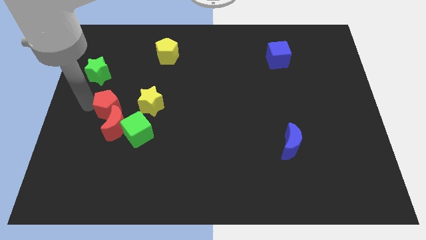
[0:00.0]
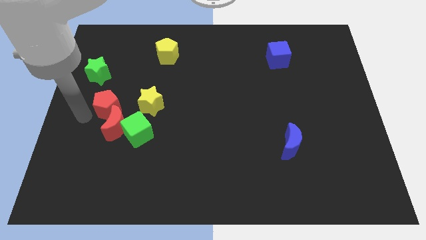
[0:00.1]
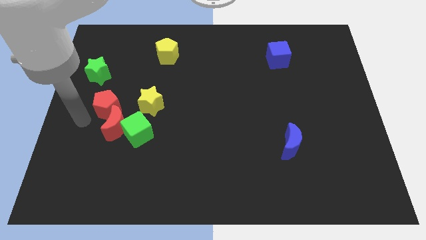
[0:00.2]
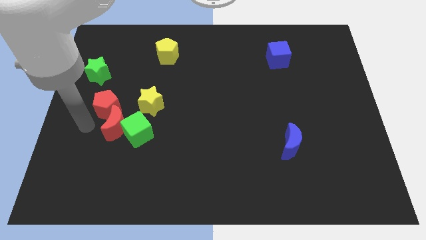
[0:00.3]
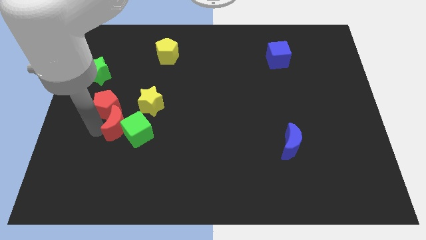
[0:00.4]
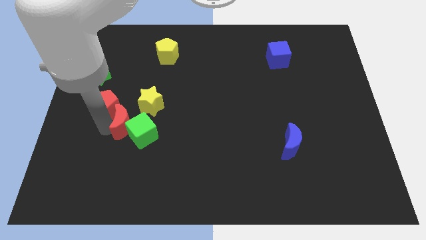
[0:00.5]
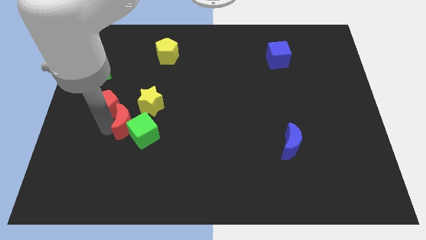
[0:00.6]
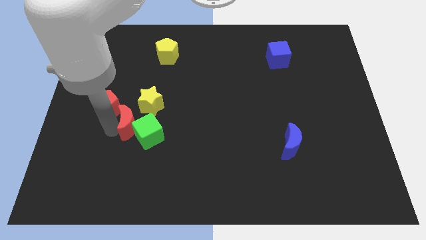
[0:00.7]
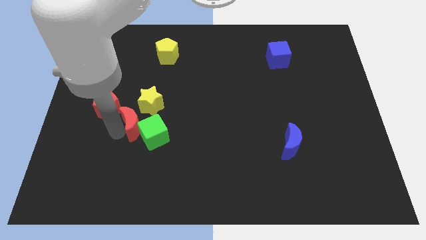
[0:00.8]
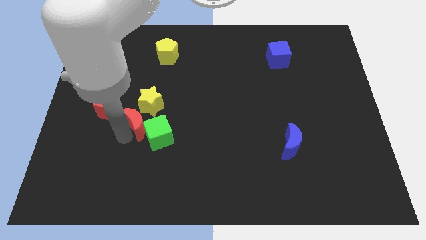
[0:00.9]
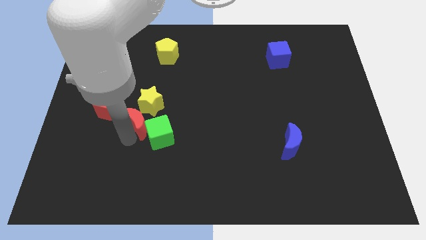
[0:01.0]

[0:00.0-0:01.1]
slide red moon along with green cube to the right a bit

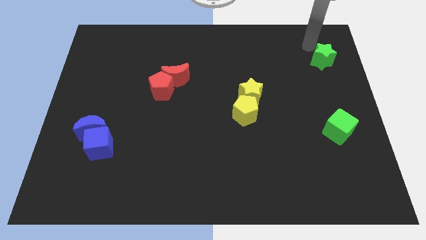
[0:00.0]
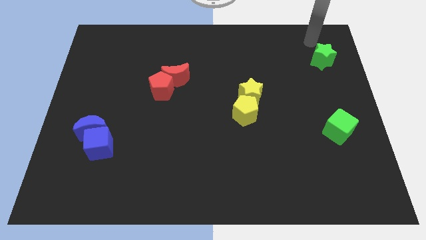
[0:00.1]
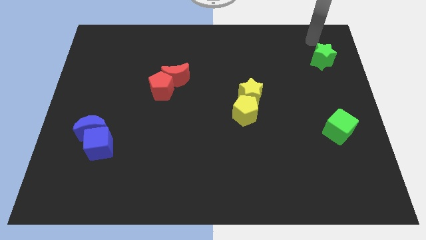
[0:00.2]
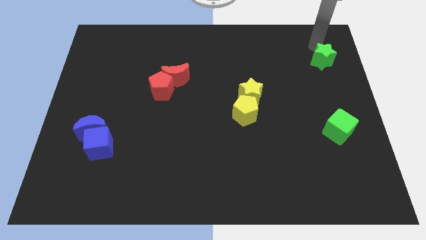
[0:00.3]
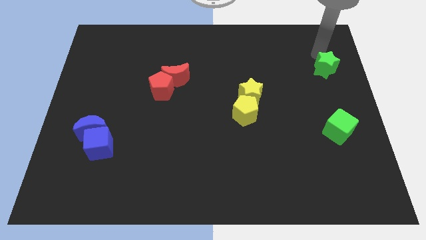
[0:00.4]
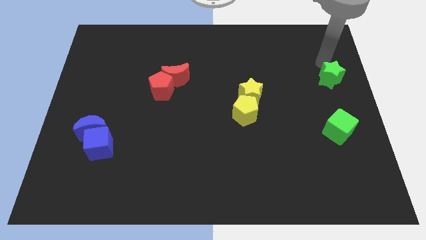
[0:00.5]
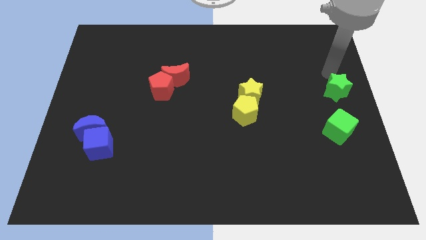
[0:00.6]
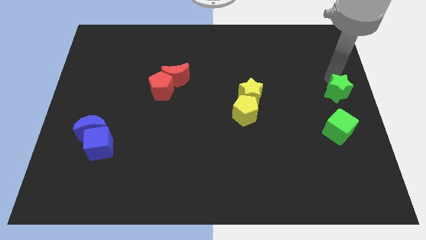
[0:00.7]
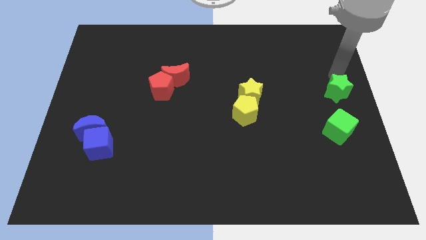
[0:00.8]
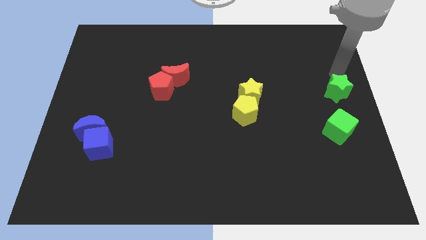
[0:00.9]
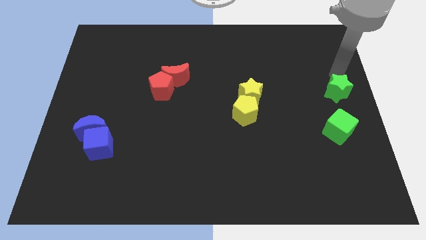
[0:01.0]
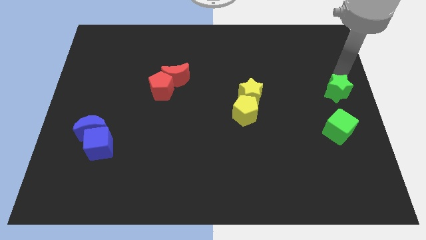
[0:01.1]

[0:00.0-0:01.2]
push the green star to the right of the yellow star

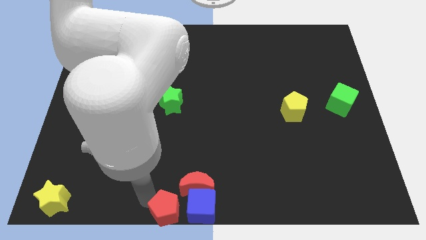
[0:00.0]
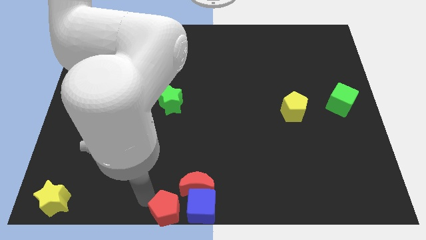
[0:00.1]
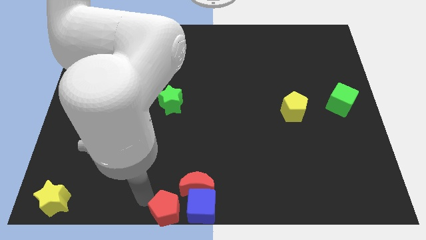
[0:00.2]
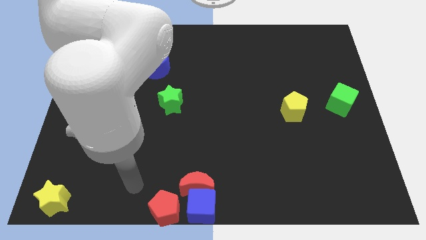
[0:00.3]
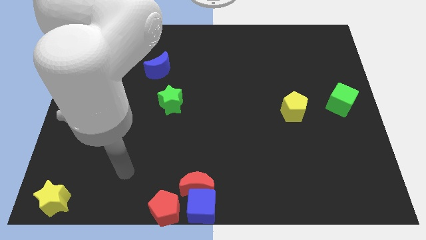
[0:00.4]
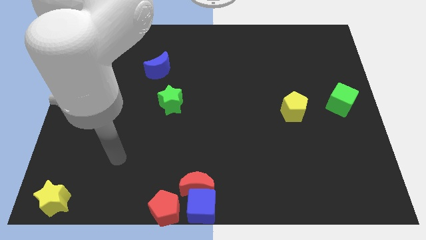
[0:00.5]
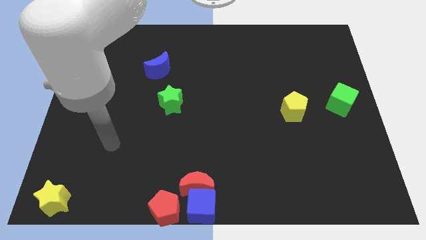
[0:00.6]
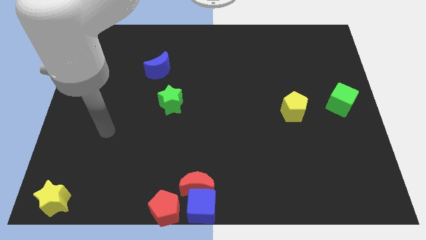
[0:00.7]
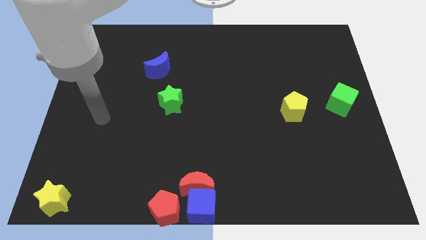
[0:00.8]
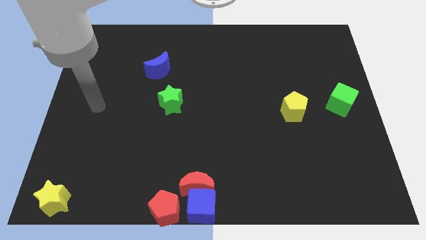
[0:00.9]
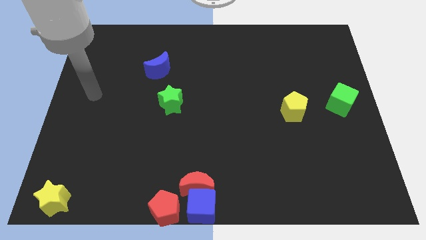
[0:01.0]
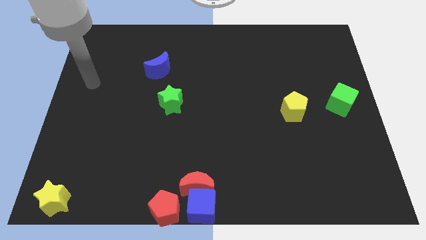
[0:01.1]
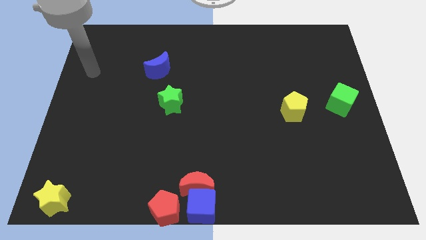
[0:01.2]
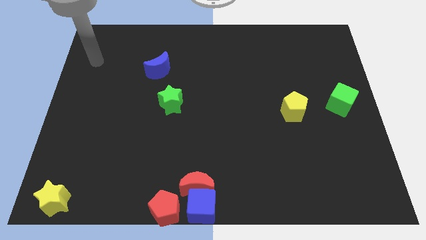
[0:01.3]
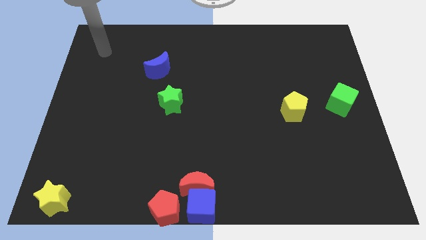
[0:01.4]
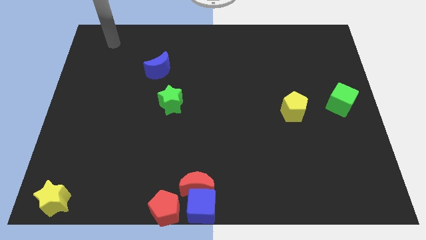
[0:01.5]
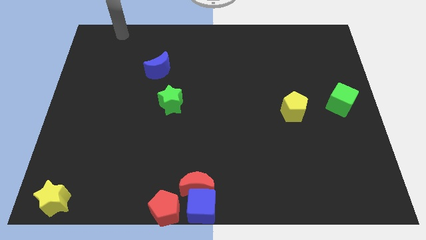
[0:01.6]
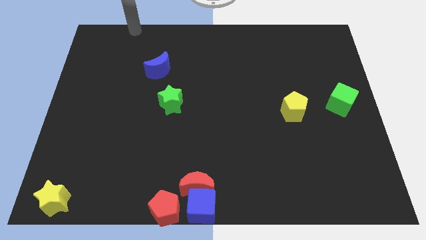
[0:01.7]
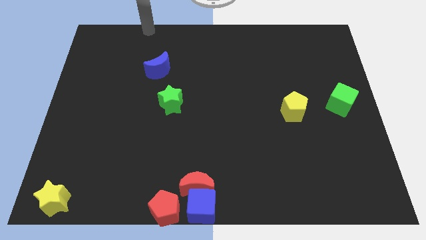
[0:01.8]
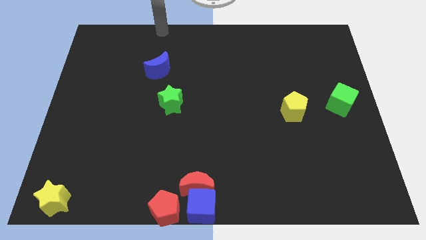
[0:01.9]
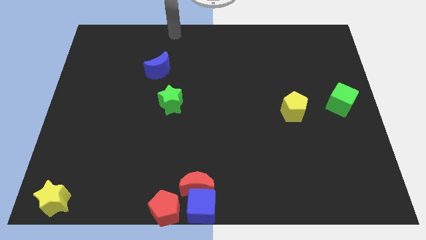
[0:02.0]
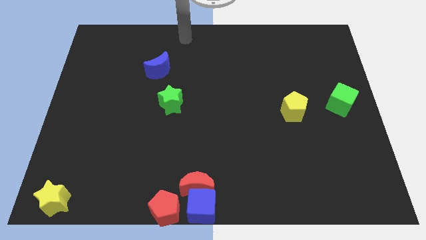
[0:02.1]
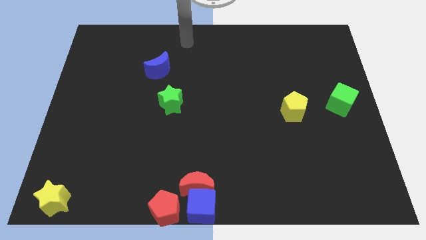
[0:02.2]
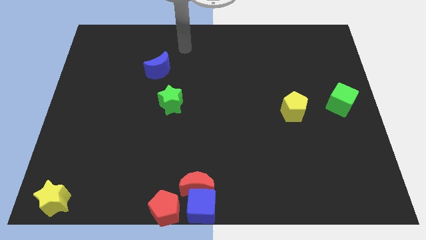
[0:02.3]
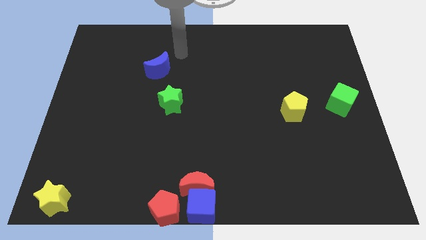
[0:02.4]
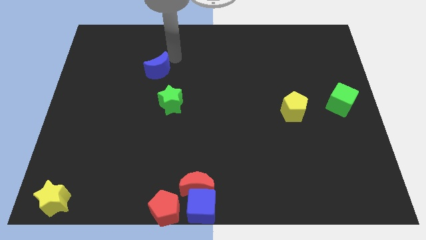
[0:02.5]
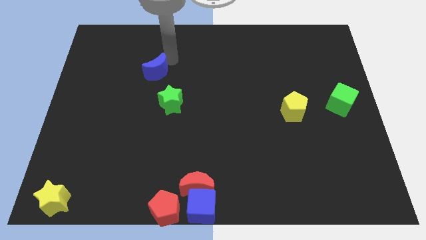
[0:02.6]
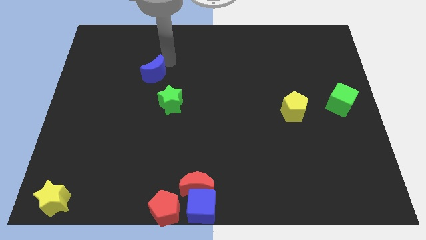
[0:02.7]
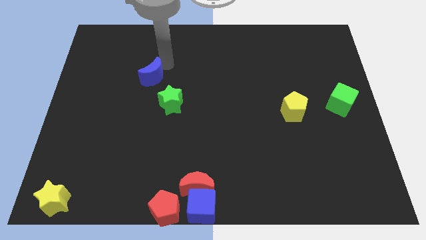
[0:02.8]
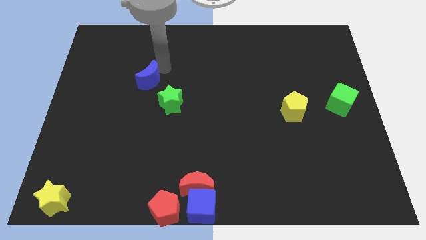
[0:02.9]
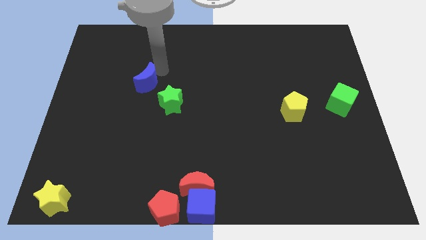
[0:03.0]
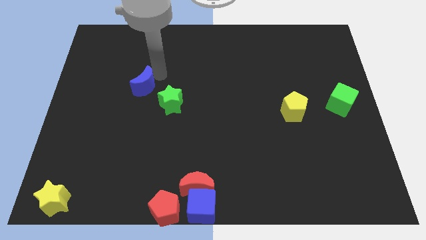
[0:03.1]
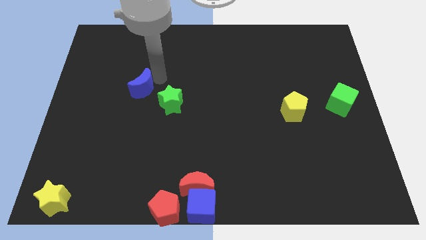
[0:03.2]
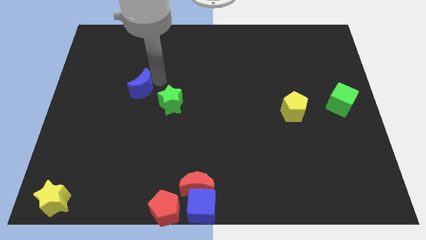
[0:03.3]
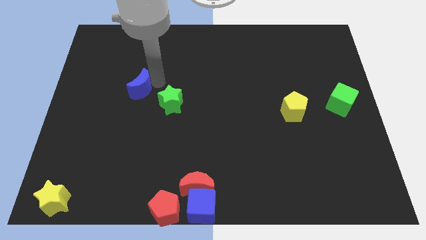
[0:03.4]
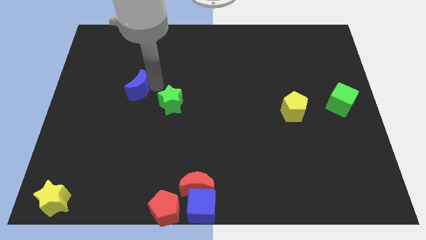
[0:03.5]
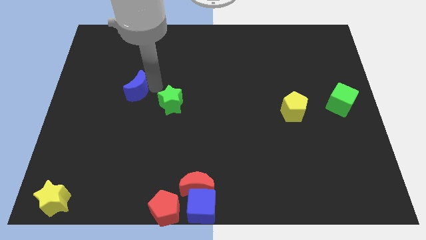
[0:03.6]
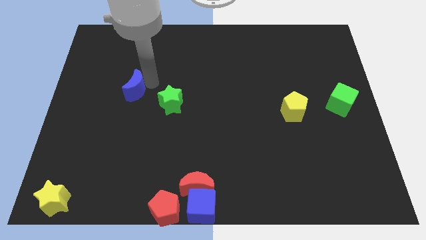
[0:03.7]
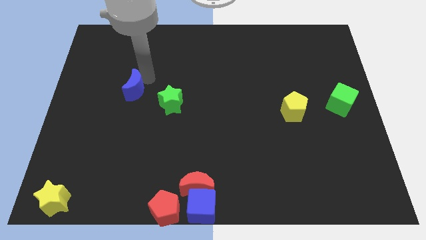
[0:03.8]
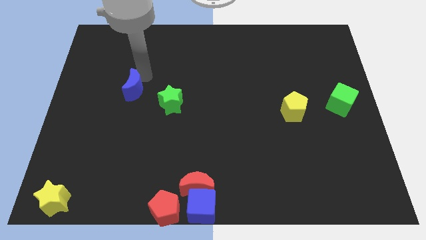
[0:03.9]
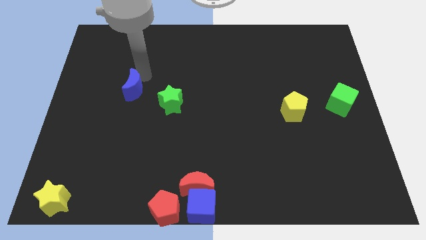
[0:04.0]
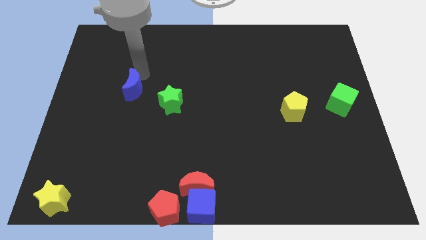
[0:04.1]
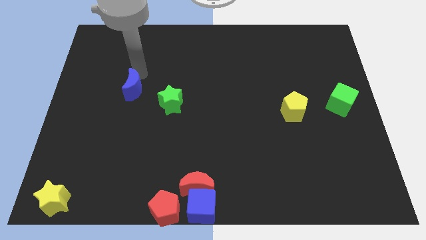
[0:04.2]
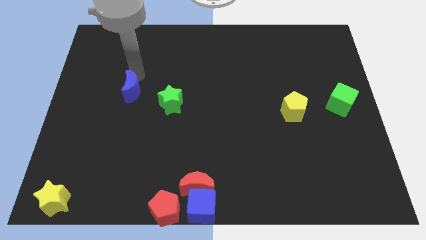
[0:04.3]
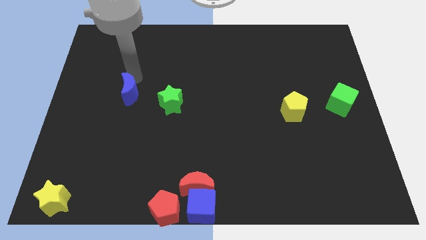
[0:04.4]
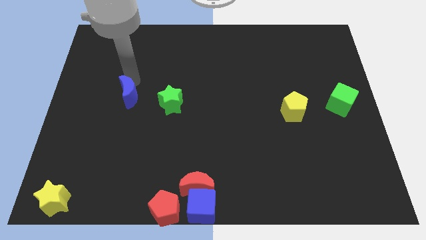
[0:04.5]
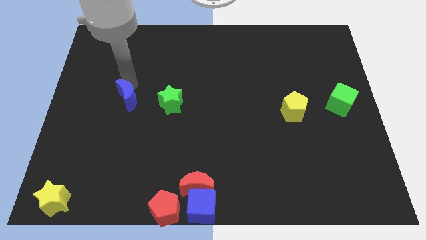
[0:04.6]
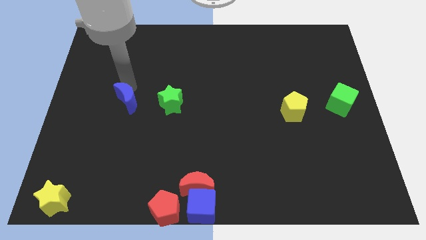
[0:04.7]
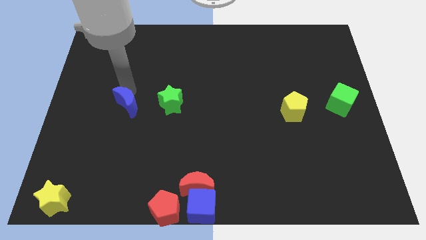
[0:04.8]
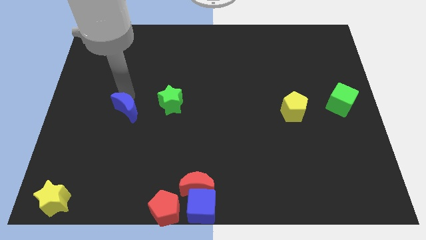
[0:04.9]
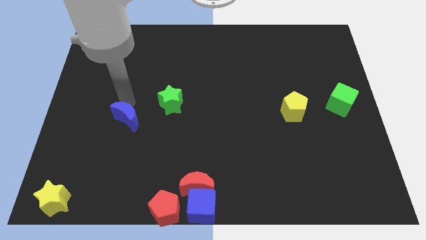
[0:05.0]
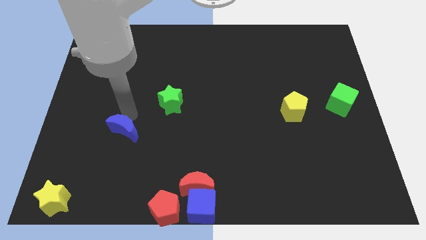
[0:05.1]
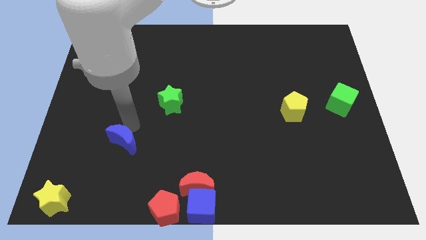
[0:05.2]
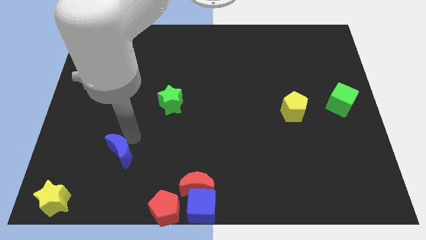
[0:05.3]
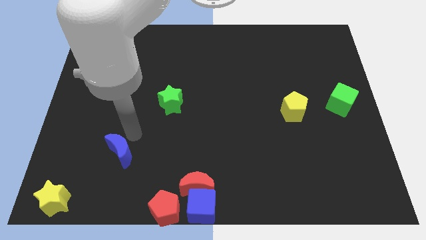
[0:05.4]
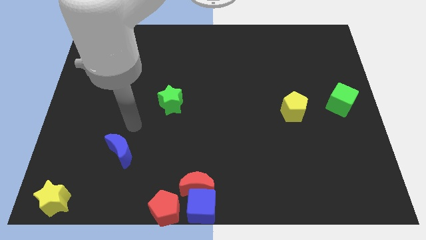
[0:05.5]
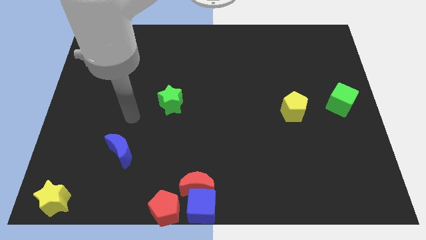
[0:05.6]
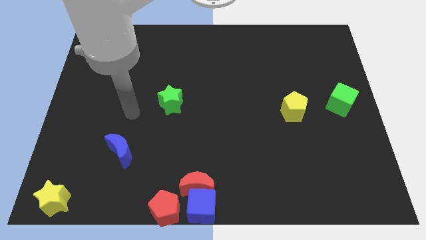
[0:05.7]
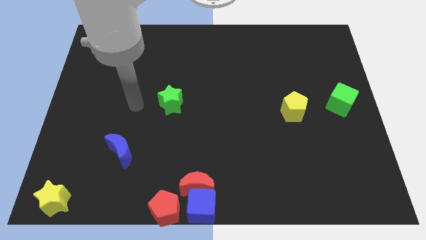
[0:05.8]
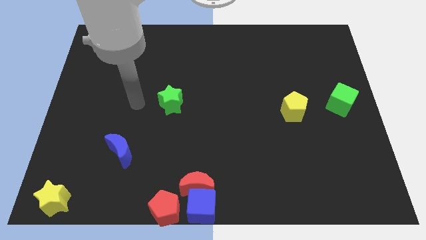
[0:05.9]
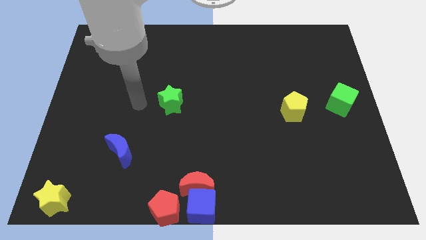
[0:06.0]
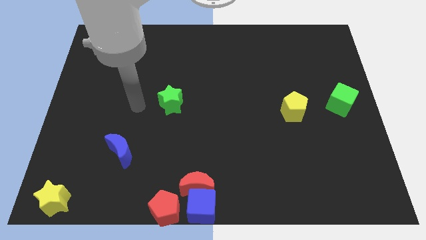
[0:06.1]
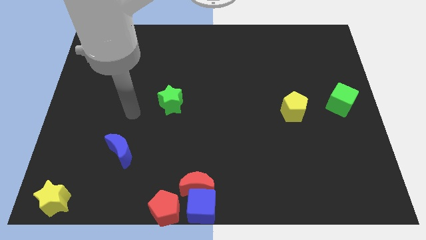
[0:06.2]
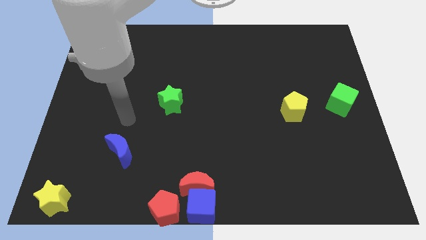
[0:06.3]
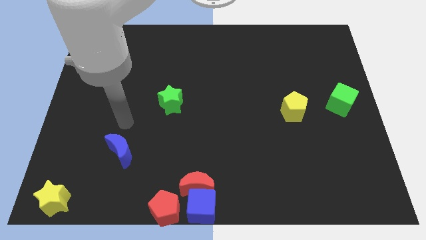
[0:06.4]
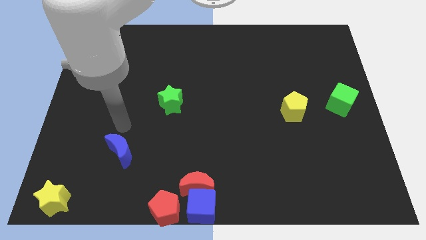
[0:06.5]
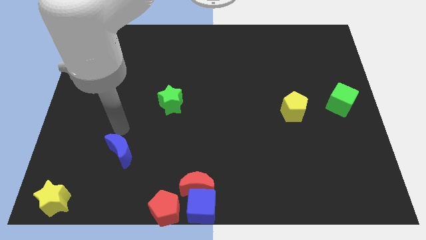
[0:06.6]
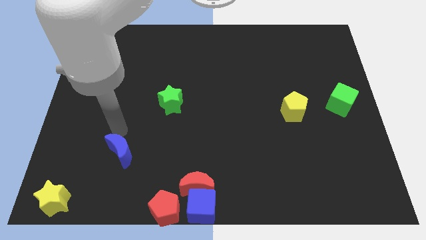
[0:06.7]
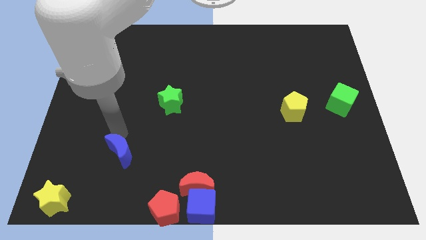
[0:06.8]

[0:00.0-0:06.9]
place the blue moon in between the green star and yellow star
